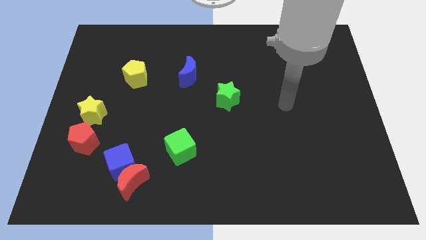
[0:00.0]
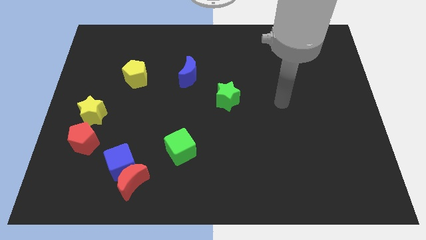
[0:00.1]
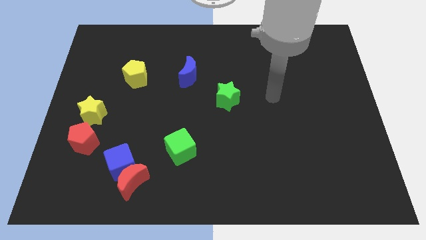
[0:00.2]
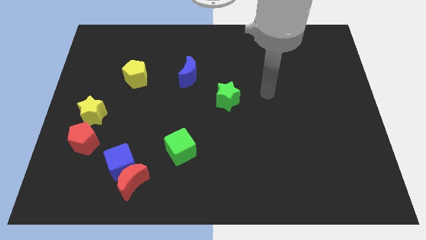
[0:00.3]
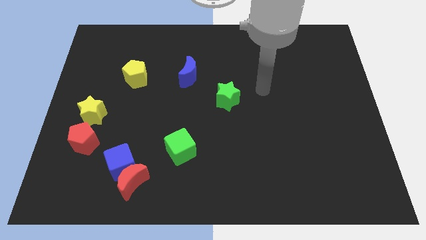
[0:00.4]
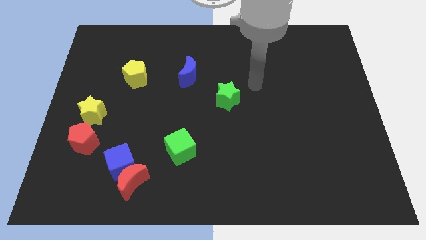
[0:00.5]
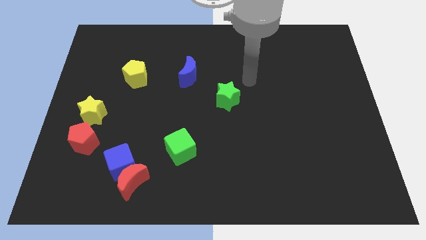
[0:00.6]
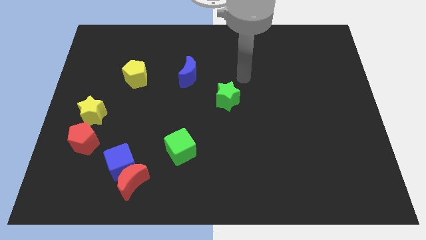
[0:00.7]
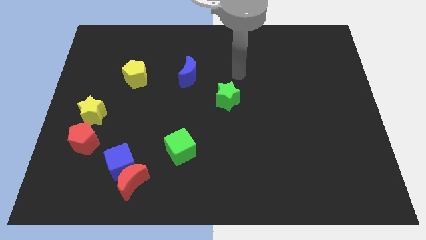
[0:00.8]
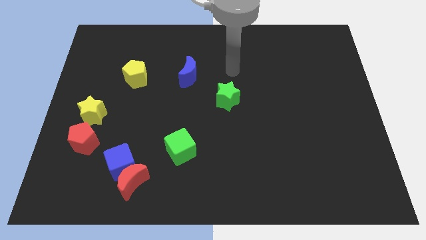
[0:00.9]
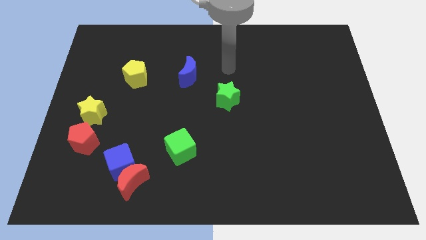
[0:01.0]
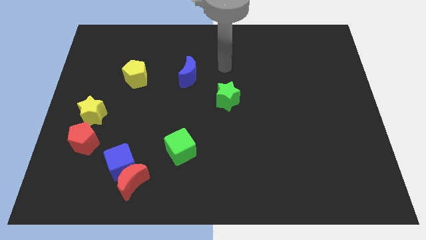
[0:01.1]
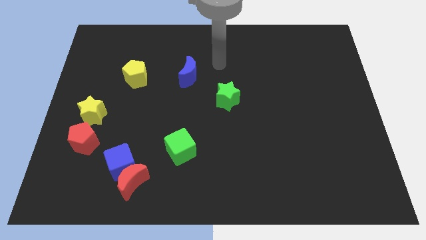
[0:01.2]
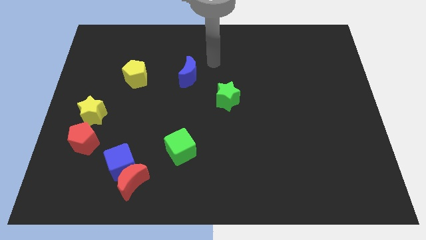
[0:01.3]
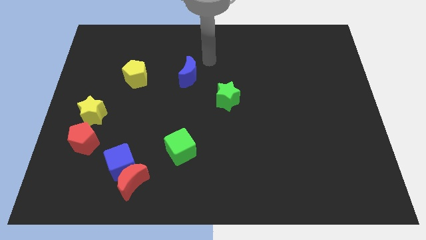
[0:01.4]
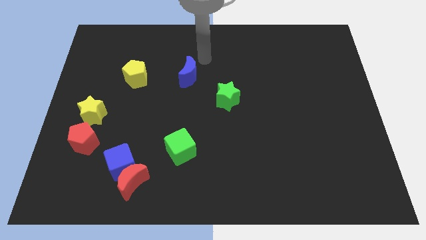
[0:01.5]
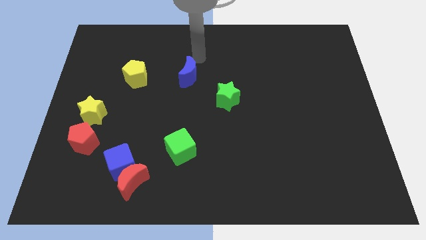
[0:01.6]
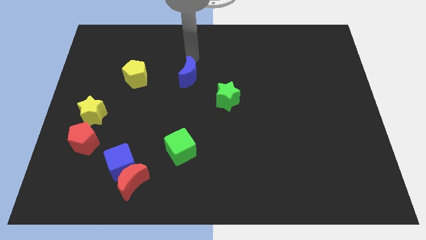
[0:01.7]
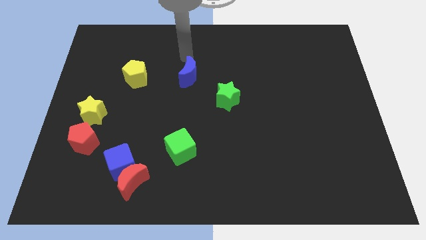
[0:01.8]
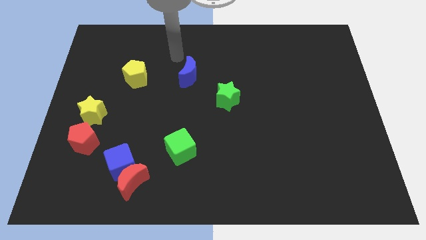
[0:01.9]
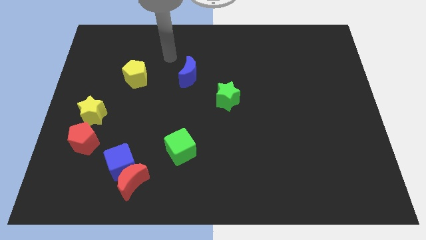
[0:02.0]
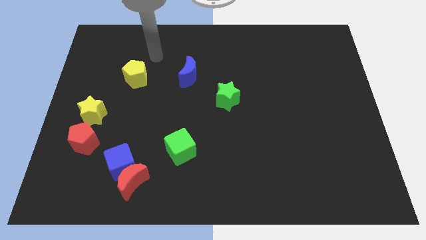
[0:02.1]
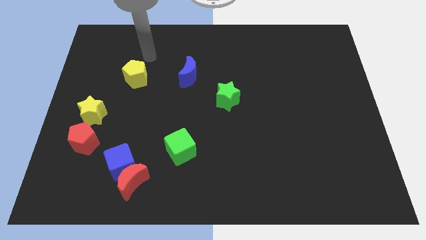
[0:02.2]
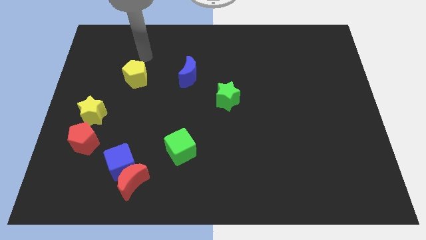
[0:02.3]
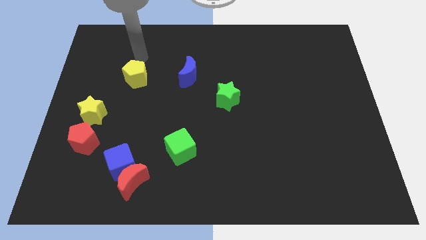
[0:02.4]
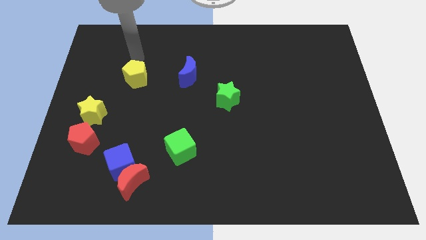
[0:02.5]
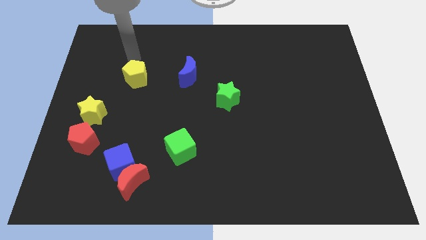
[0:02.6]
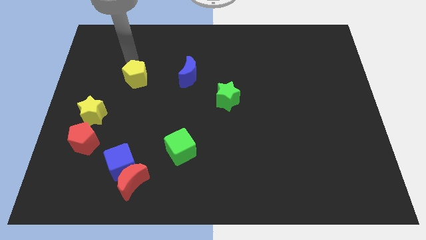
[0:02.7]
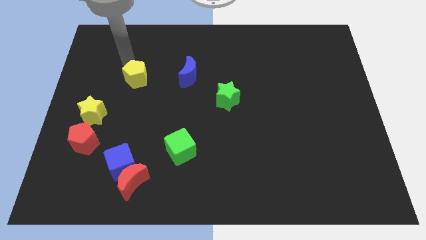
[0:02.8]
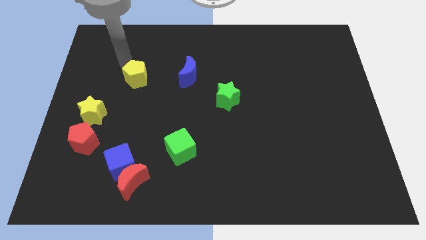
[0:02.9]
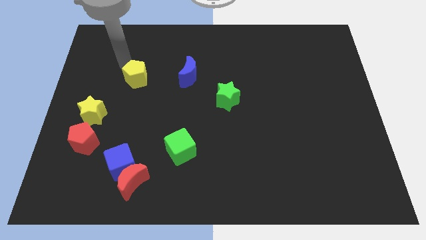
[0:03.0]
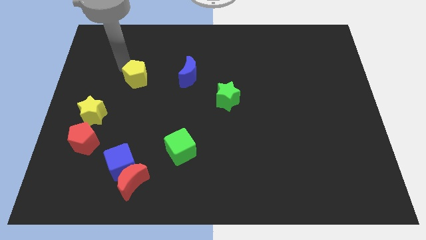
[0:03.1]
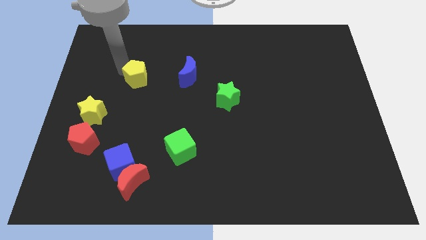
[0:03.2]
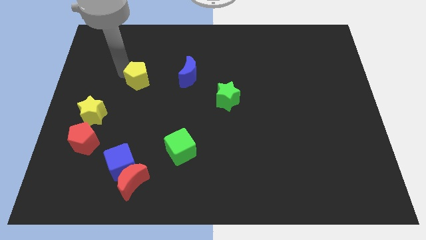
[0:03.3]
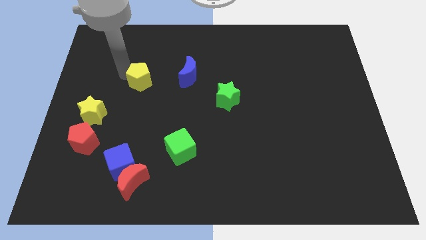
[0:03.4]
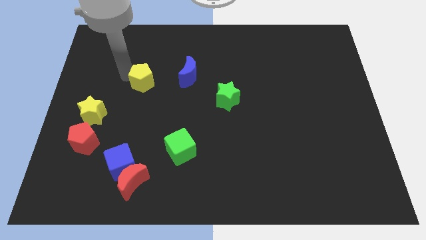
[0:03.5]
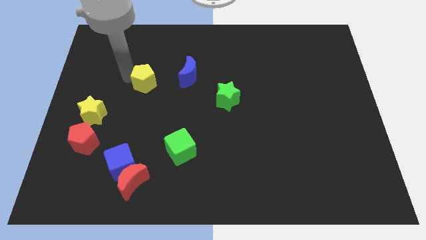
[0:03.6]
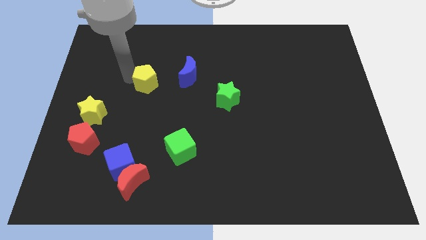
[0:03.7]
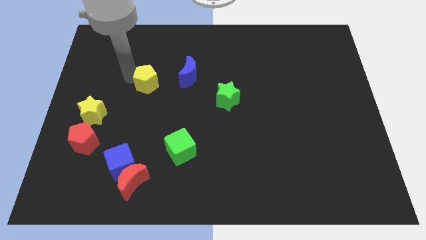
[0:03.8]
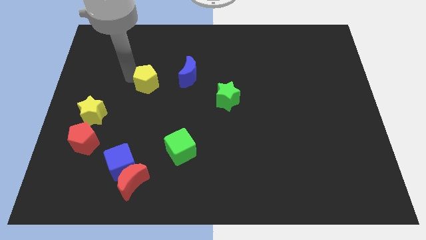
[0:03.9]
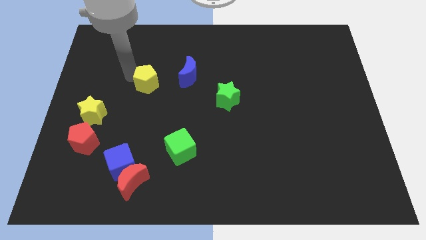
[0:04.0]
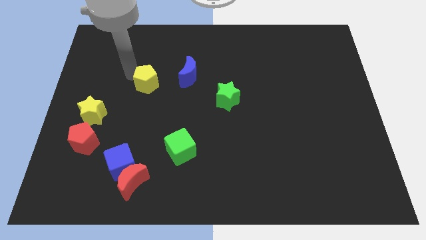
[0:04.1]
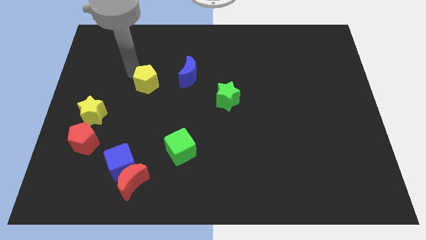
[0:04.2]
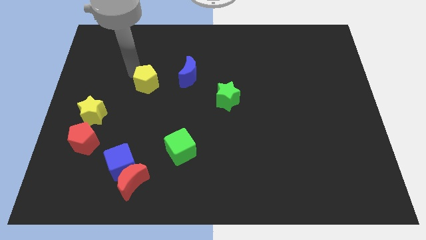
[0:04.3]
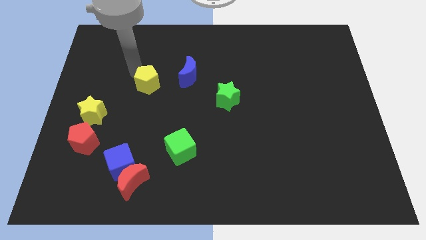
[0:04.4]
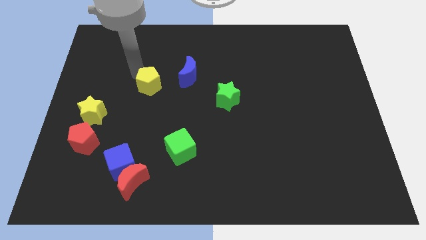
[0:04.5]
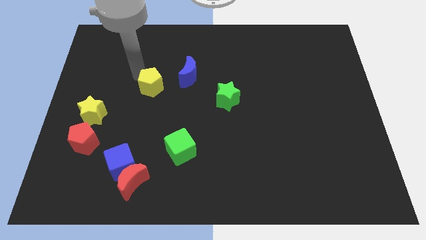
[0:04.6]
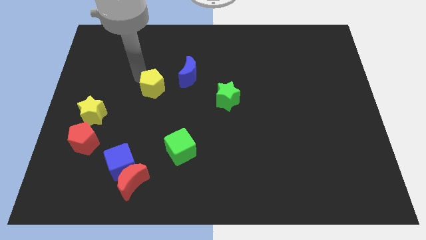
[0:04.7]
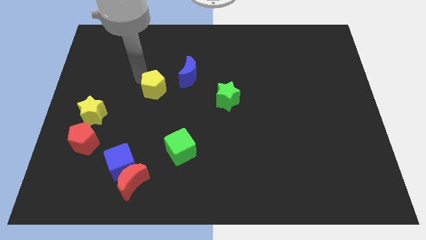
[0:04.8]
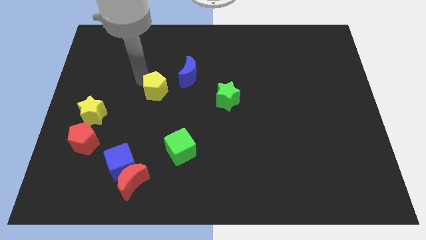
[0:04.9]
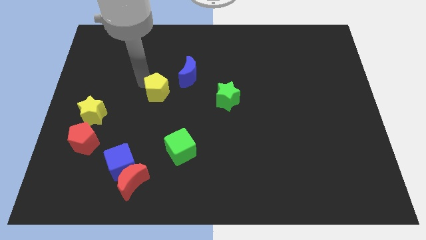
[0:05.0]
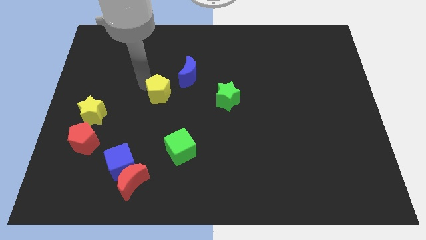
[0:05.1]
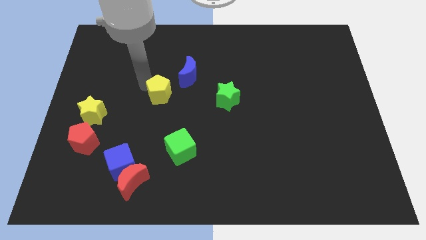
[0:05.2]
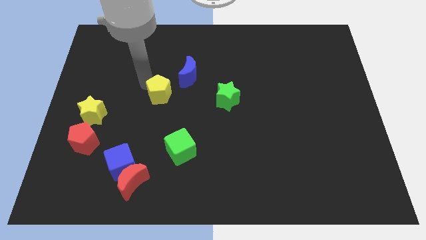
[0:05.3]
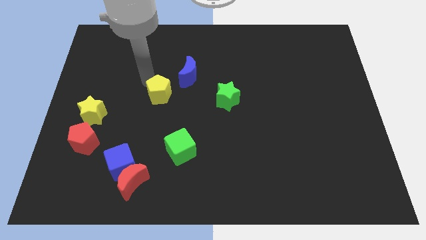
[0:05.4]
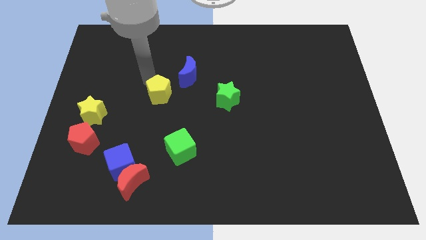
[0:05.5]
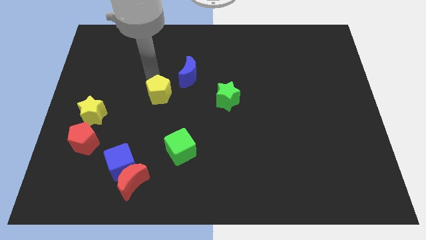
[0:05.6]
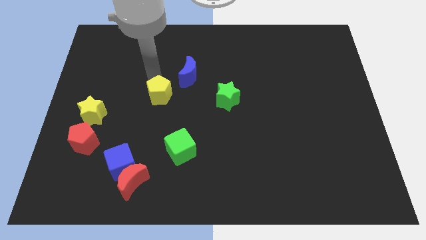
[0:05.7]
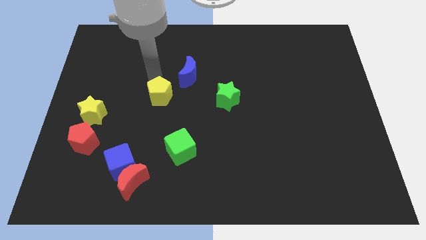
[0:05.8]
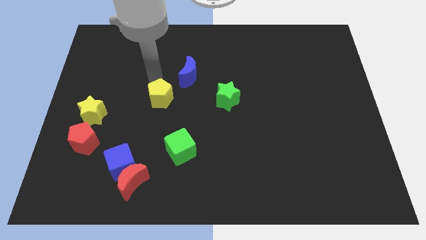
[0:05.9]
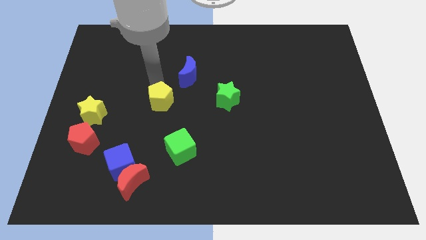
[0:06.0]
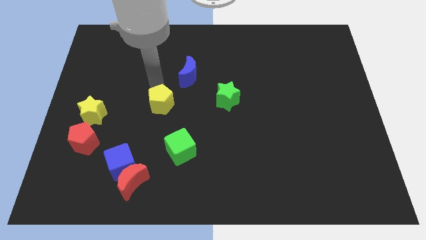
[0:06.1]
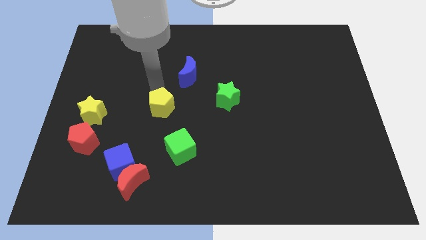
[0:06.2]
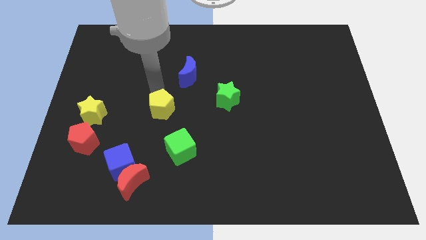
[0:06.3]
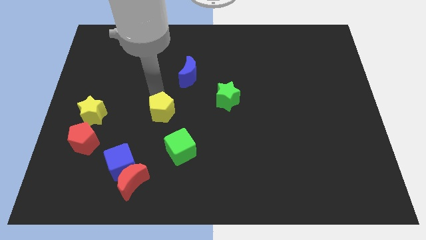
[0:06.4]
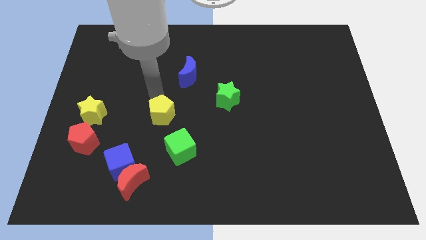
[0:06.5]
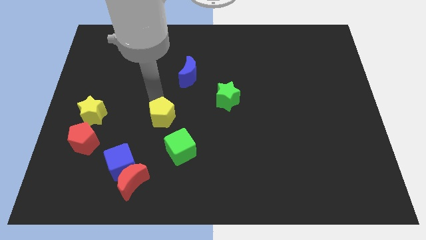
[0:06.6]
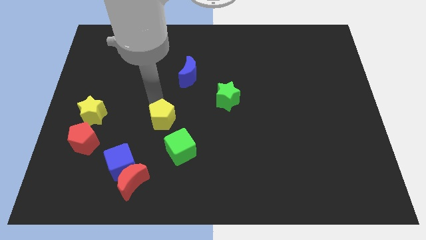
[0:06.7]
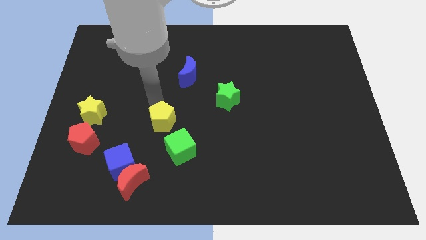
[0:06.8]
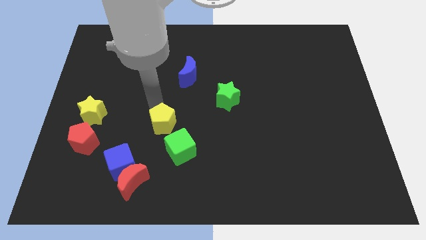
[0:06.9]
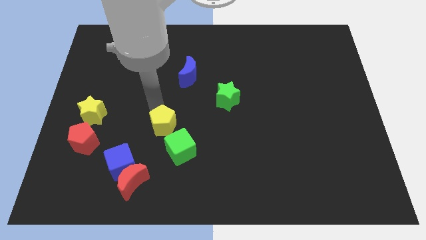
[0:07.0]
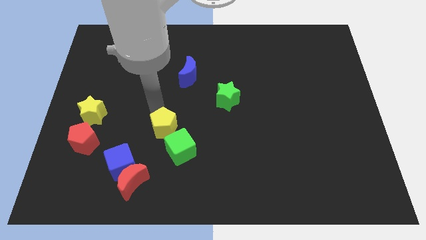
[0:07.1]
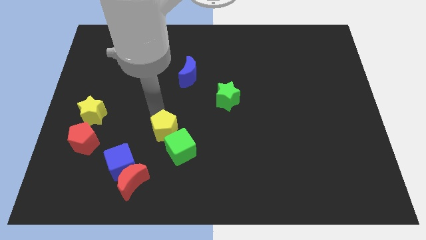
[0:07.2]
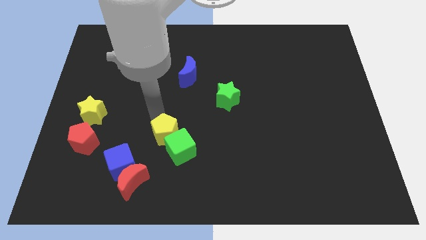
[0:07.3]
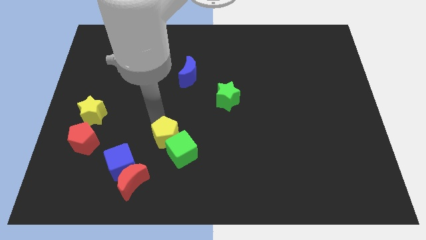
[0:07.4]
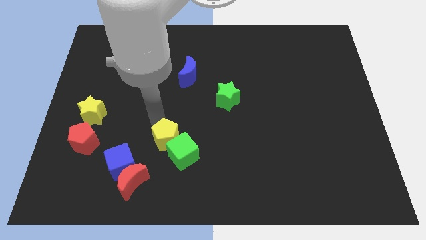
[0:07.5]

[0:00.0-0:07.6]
slide the yellow pentagon towards the green cube

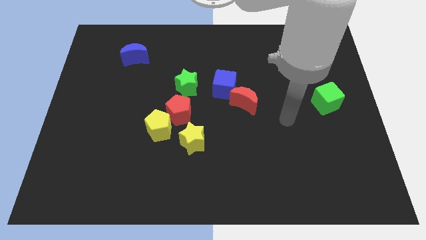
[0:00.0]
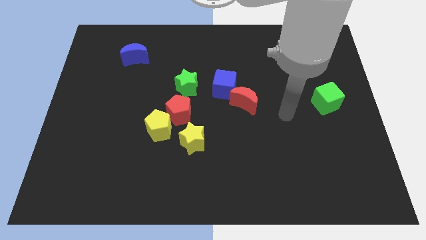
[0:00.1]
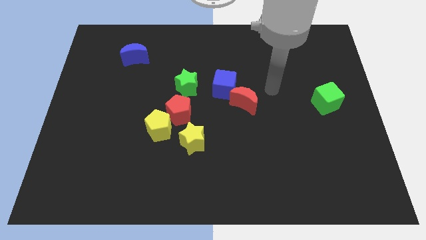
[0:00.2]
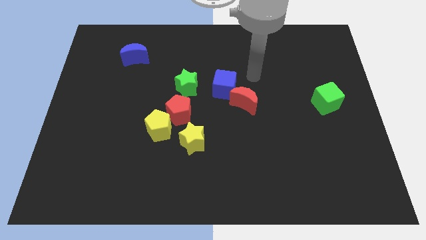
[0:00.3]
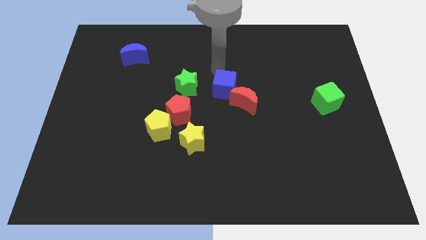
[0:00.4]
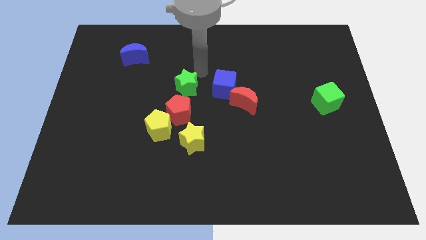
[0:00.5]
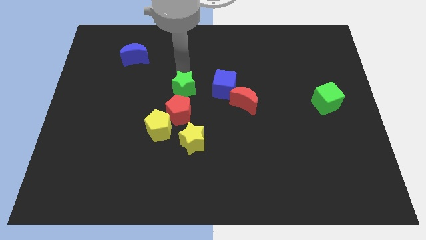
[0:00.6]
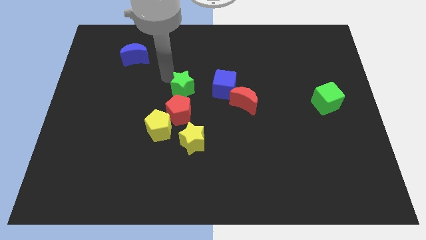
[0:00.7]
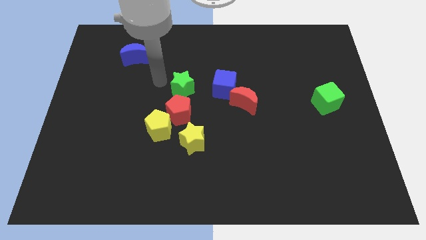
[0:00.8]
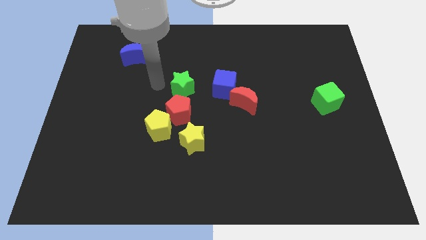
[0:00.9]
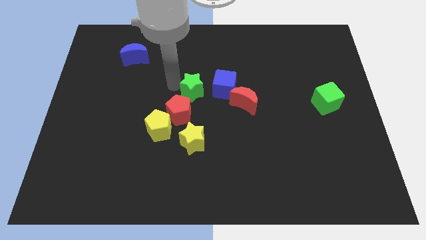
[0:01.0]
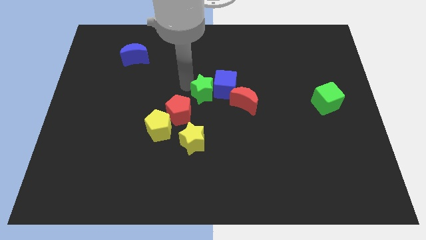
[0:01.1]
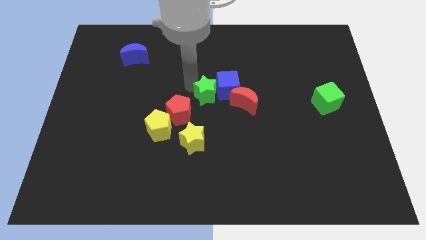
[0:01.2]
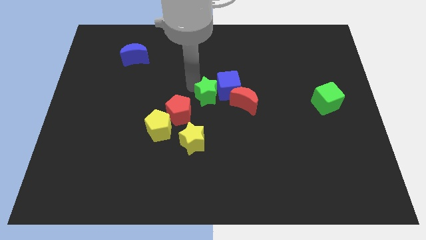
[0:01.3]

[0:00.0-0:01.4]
push the green star next to the blue cube
